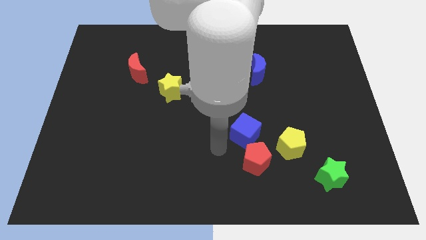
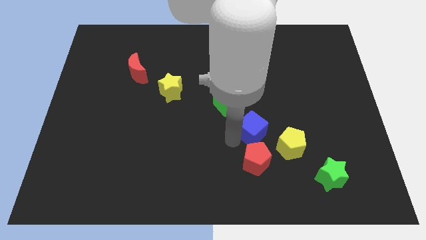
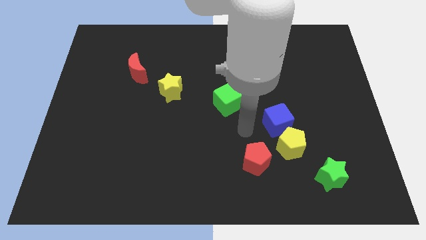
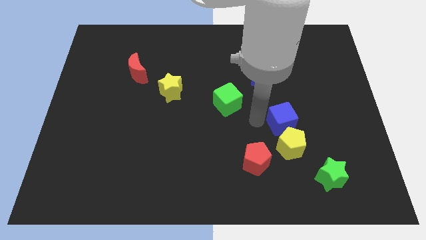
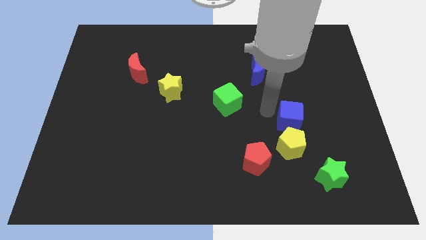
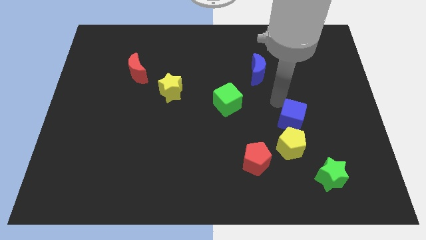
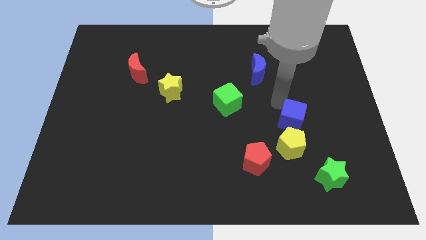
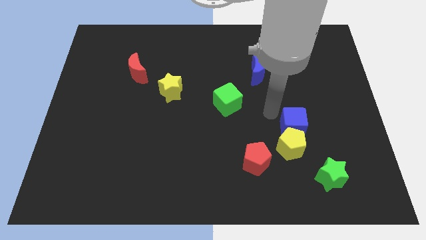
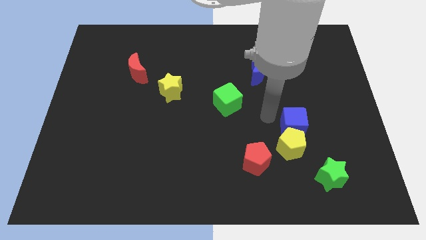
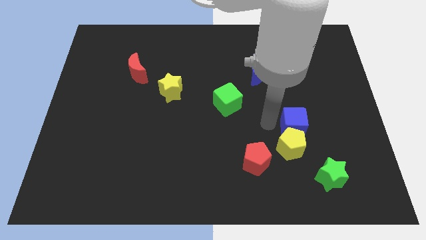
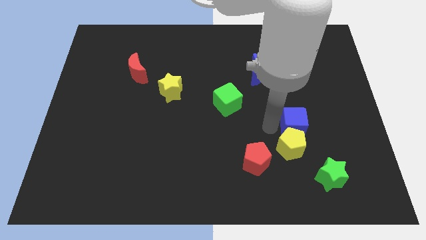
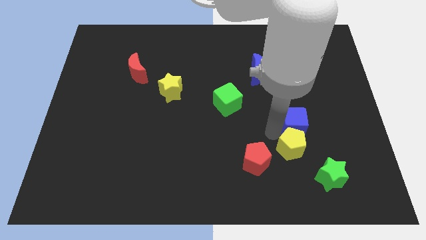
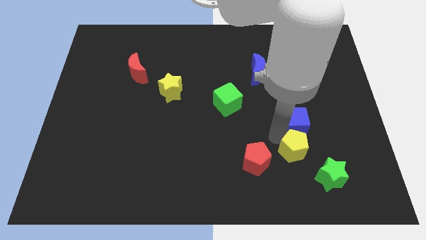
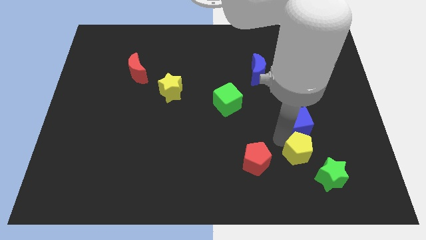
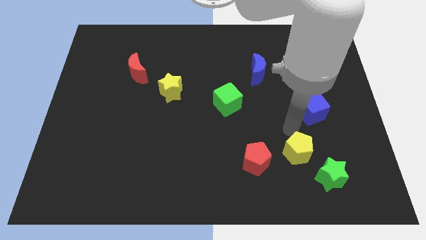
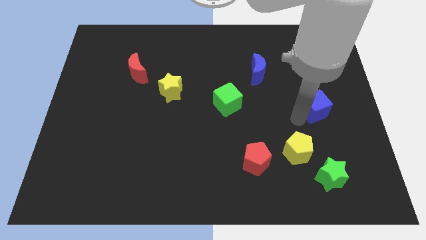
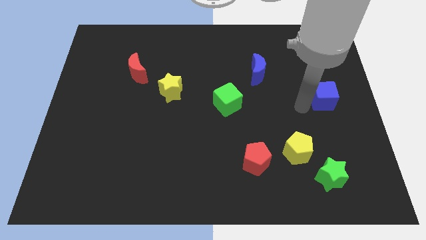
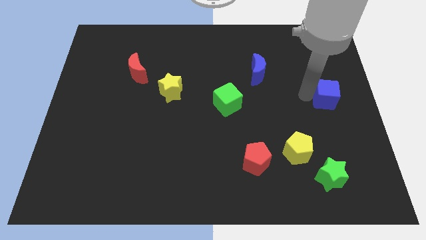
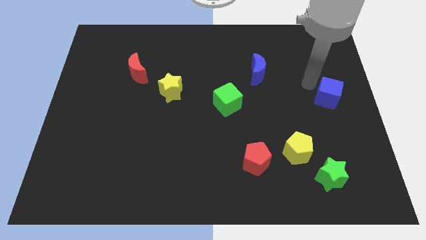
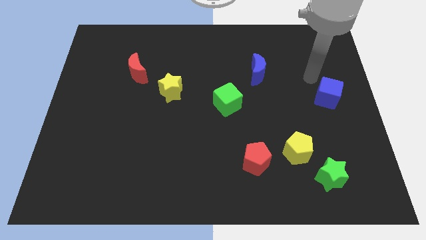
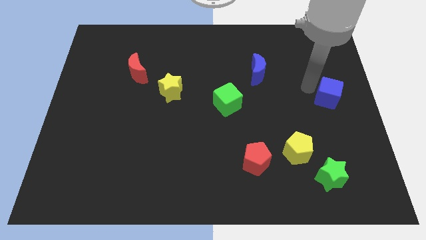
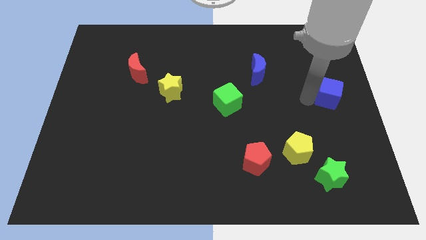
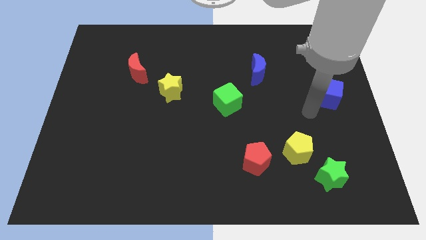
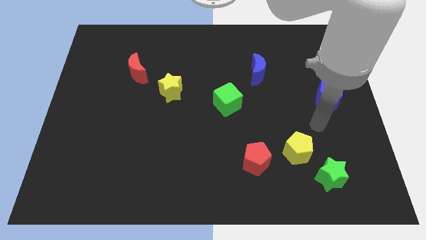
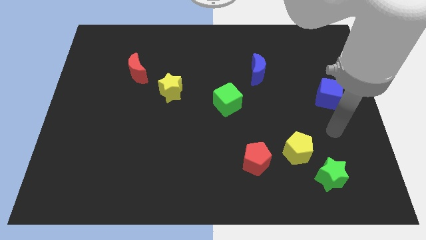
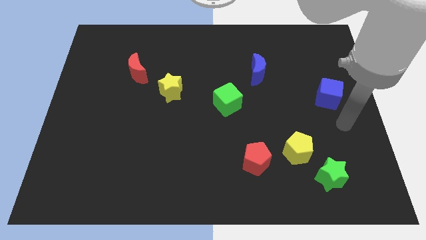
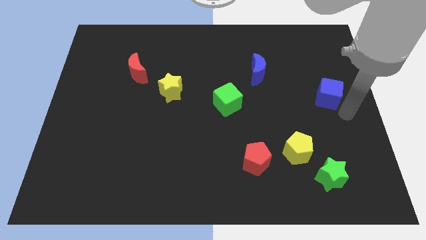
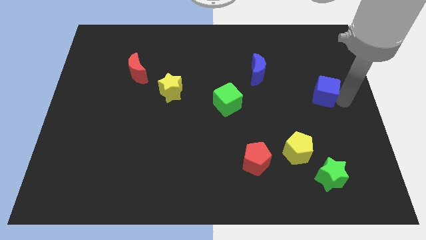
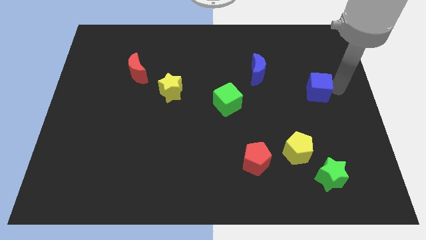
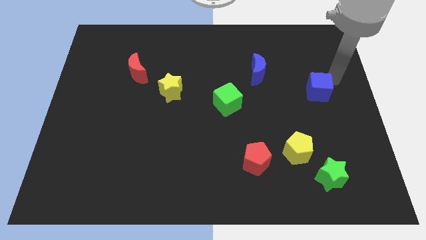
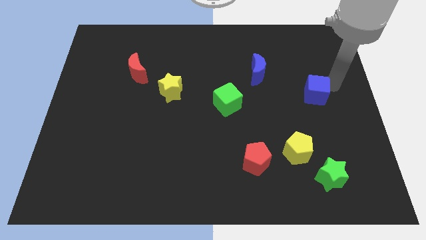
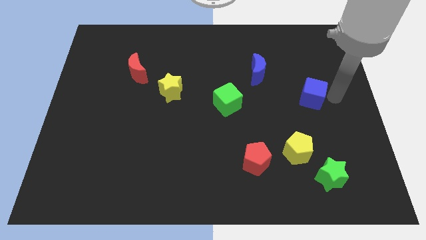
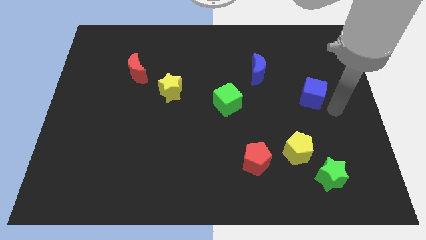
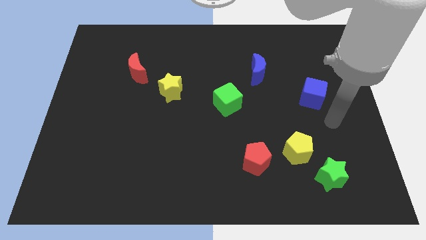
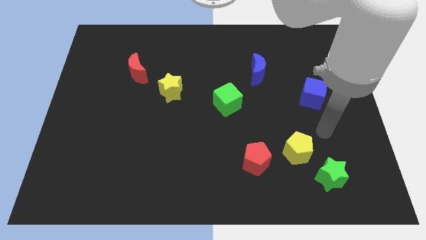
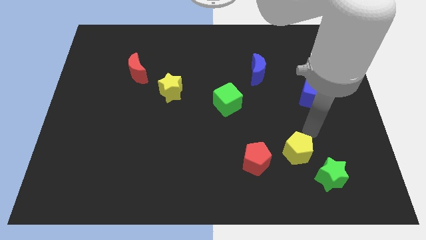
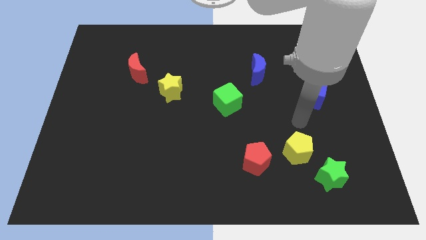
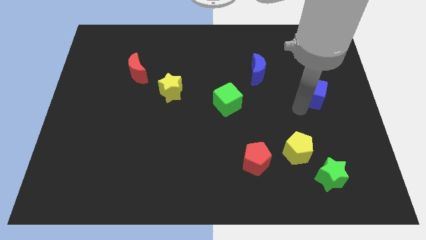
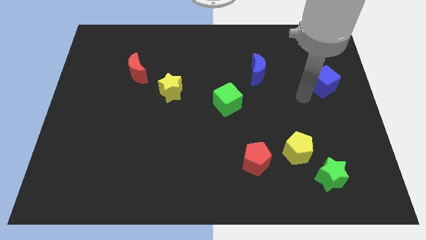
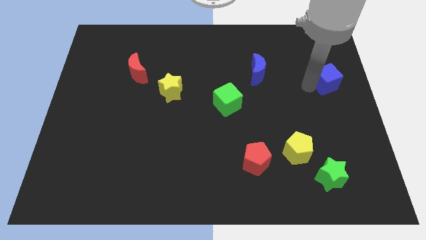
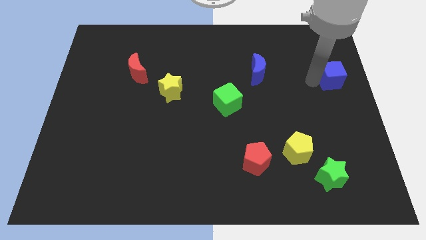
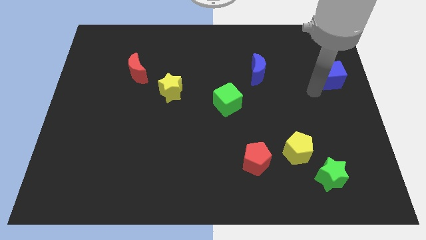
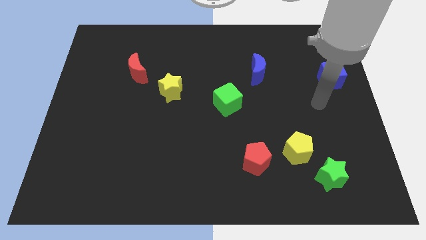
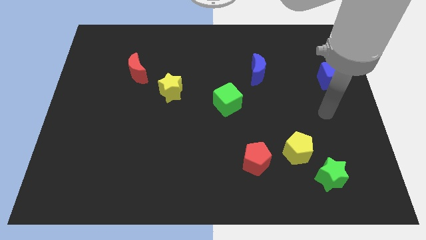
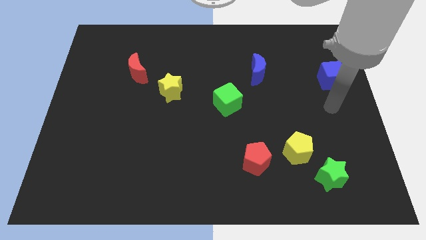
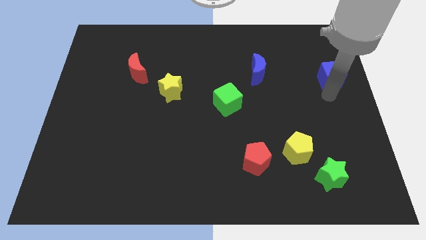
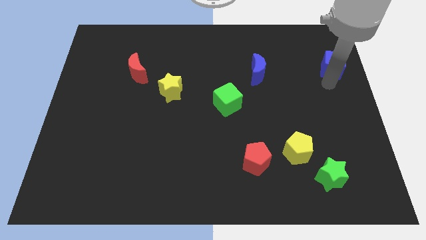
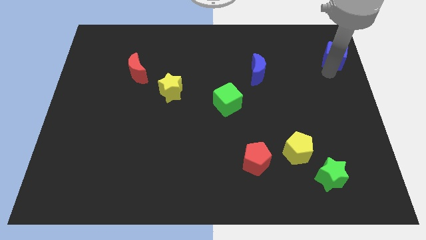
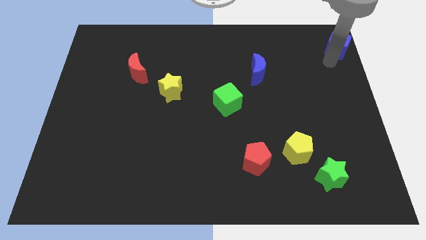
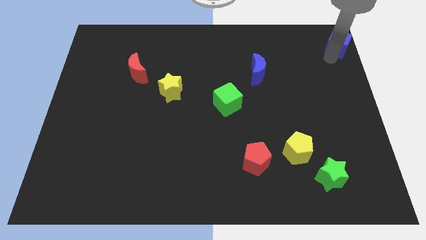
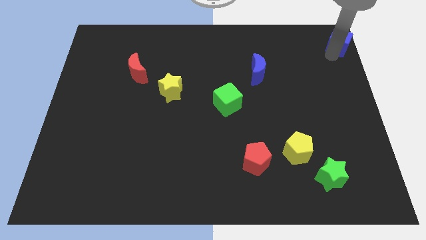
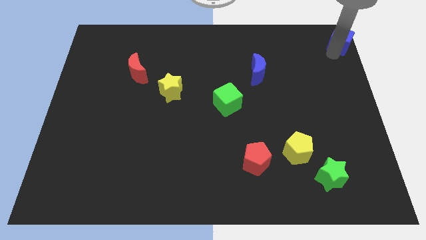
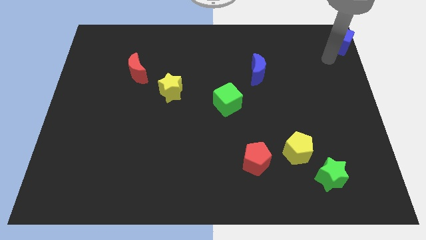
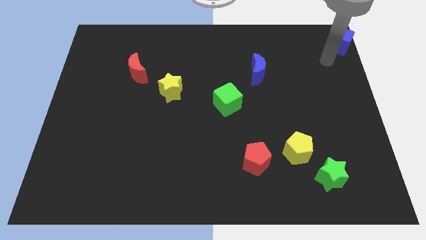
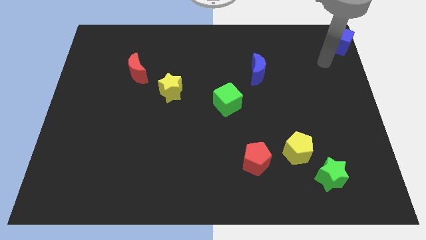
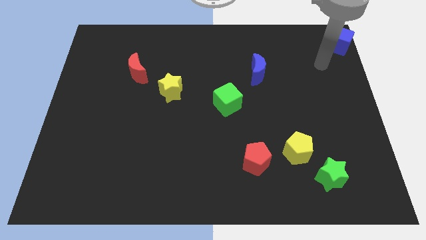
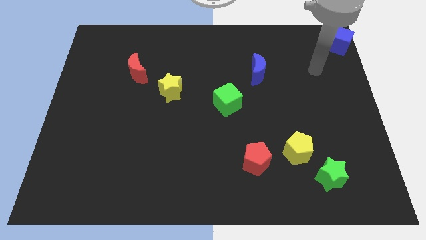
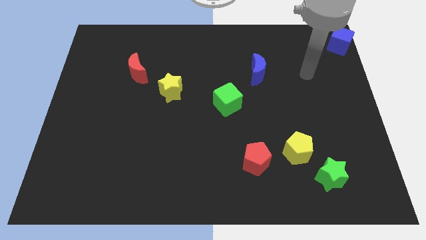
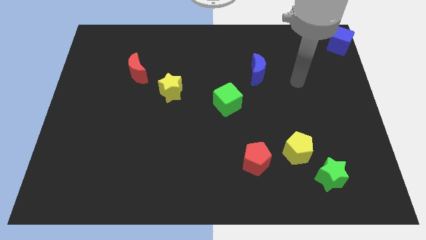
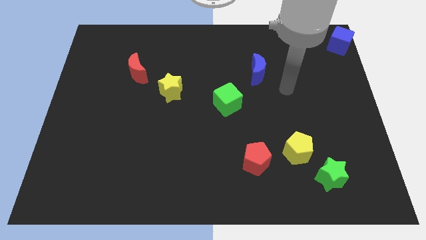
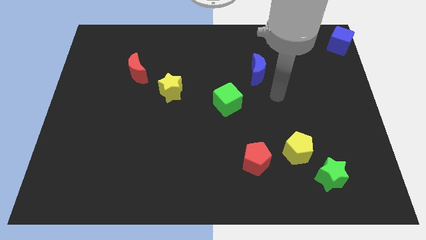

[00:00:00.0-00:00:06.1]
move the blue cube to the top right corner of the board

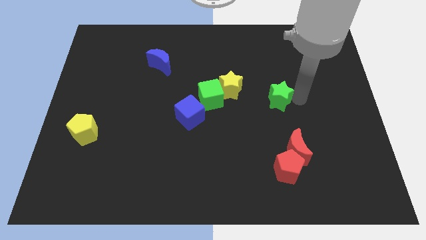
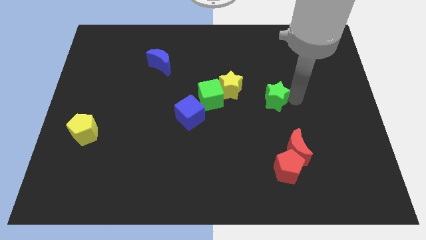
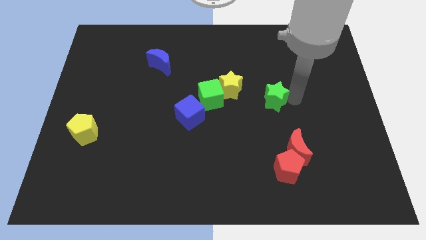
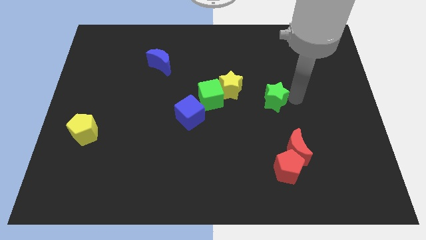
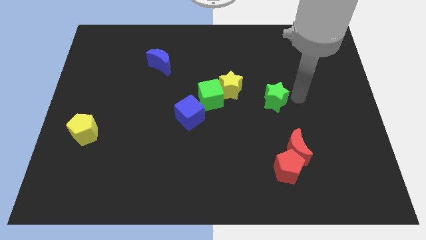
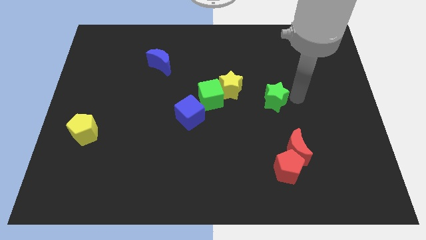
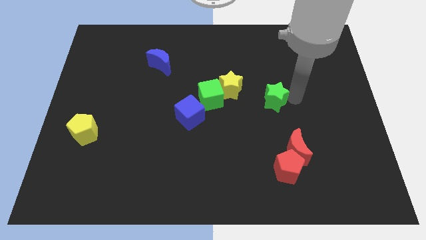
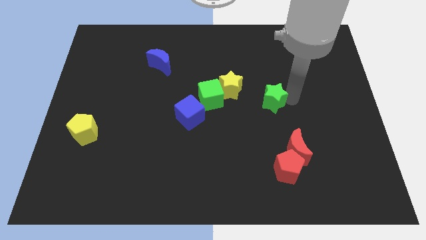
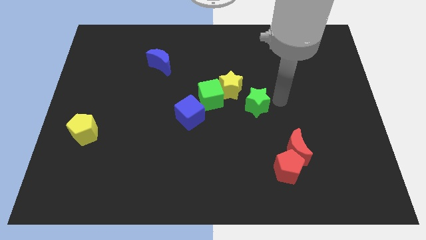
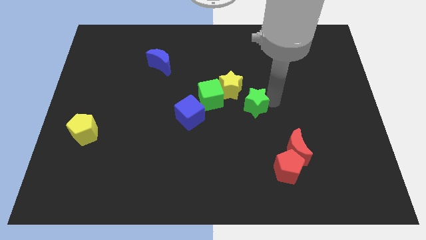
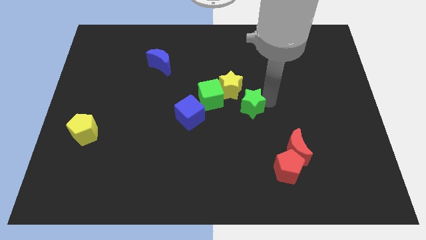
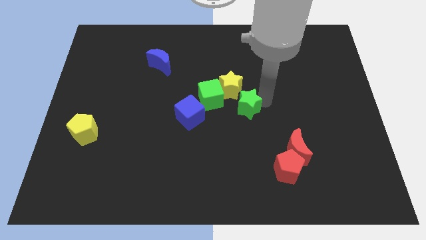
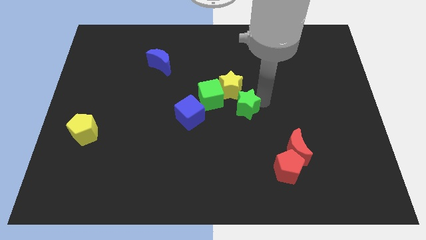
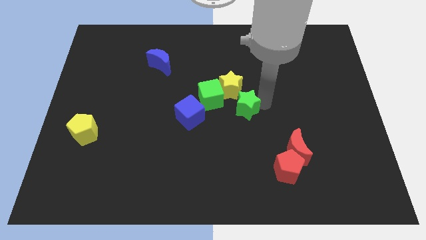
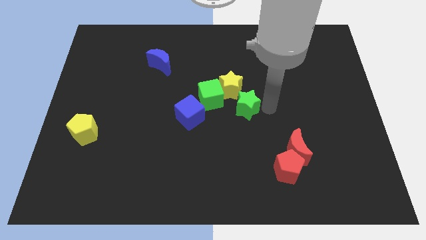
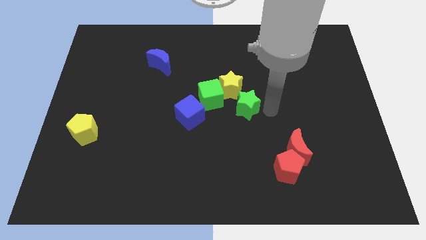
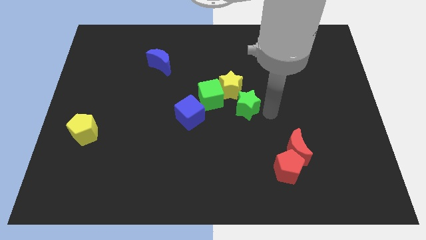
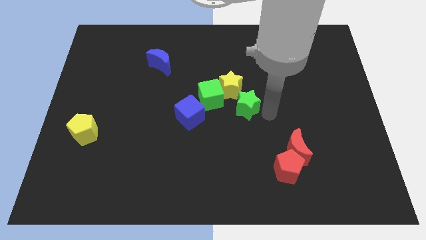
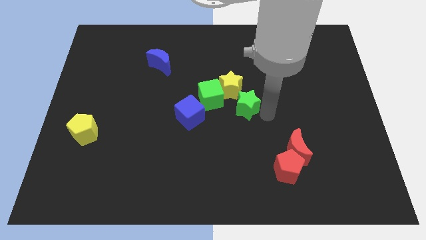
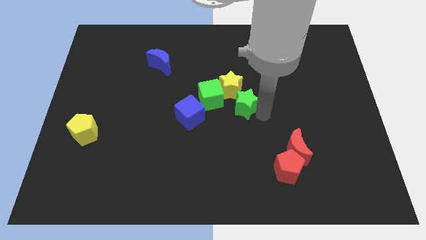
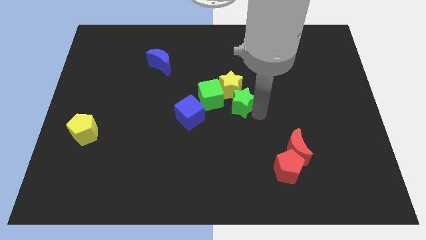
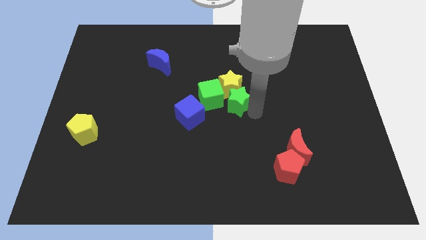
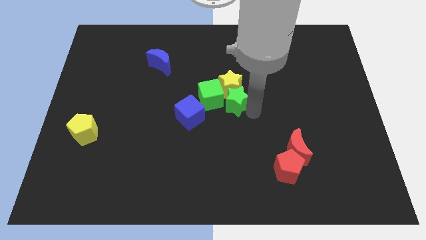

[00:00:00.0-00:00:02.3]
push the green star to the right of the green cube

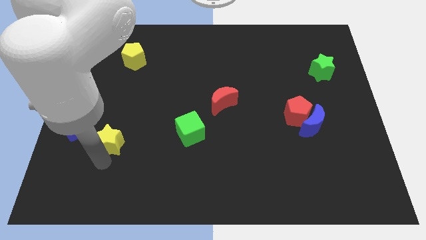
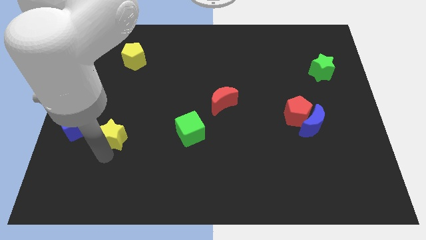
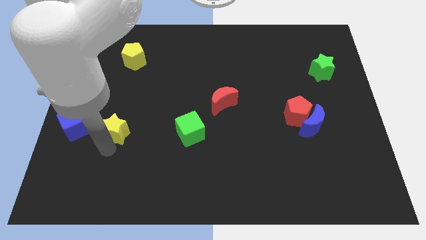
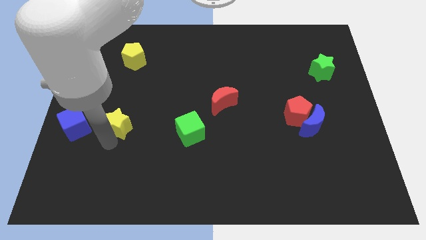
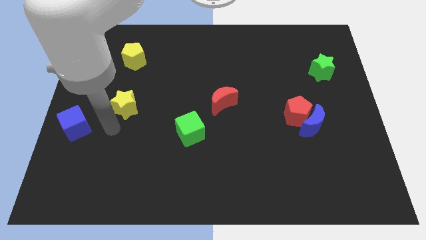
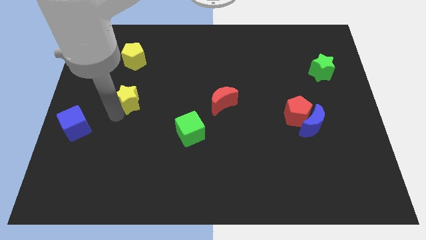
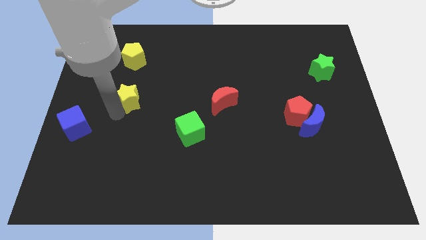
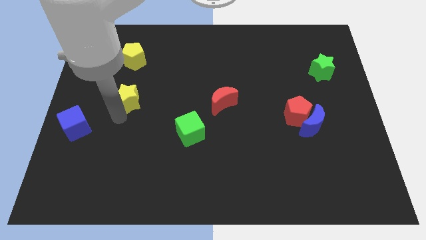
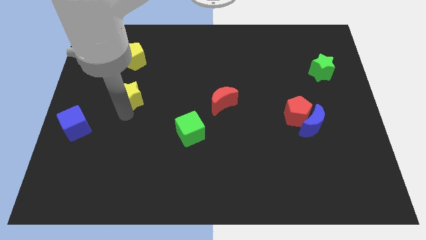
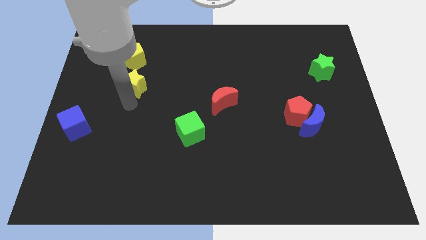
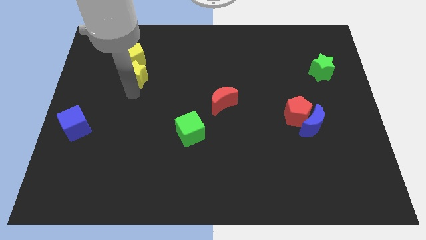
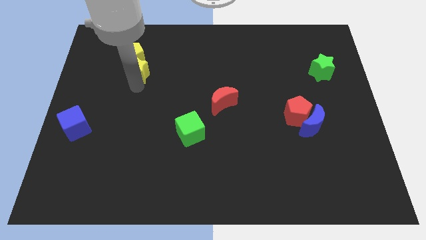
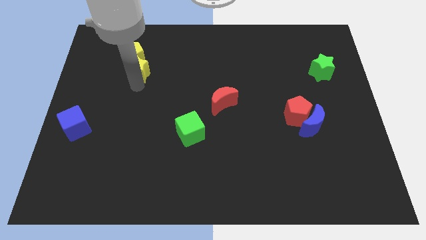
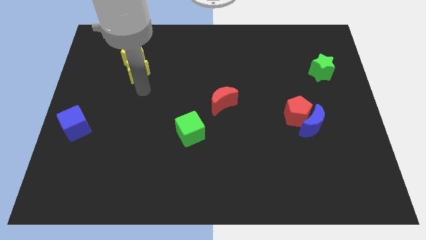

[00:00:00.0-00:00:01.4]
push the yellow star into the yellow pentagon
